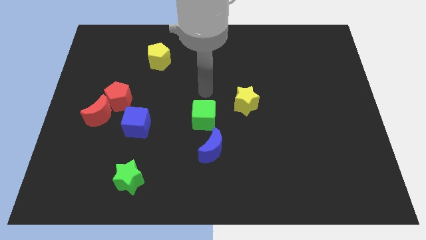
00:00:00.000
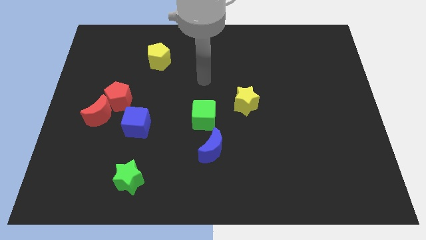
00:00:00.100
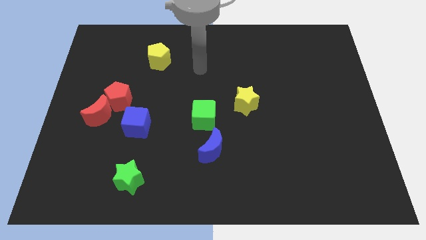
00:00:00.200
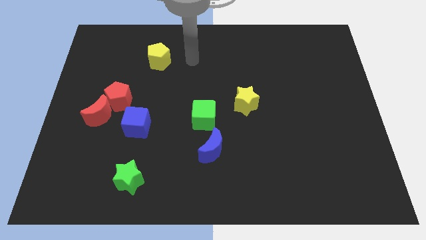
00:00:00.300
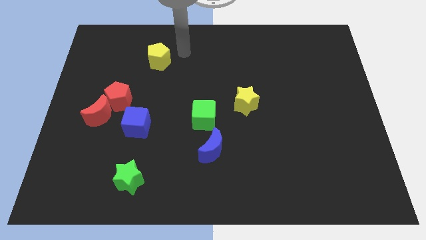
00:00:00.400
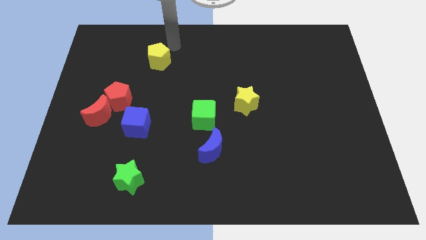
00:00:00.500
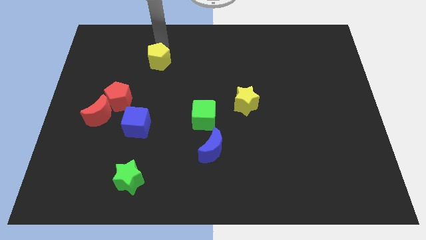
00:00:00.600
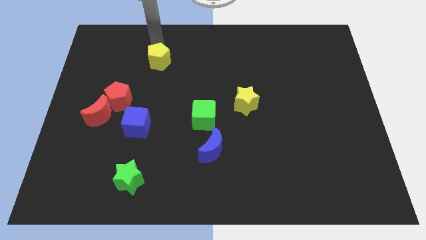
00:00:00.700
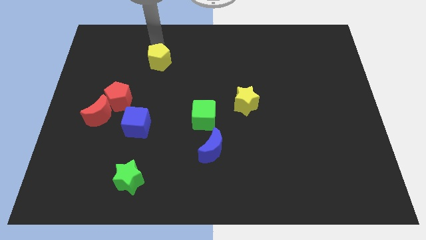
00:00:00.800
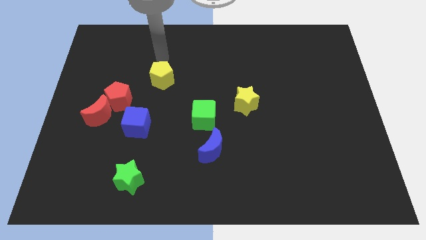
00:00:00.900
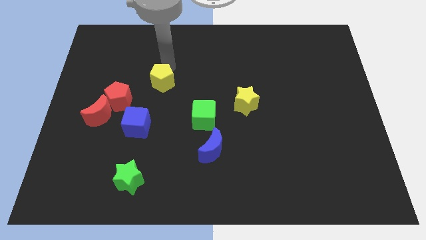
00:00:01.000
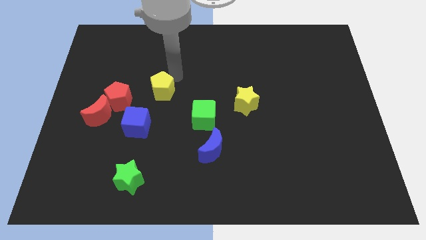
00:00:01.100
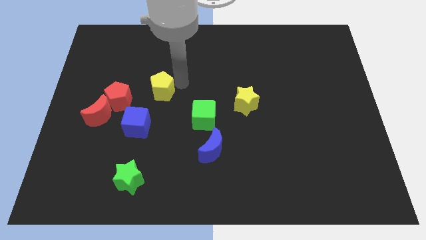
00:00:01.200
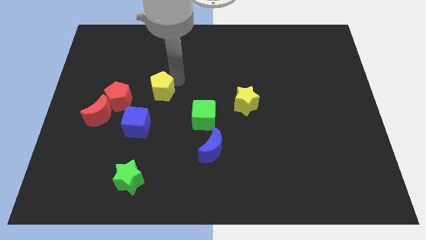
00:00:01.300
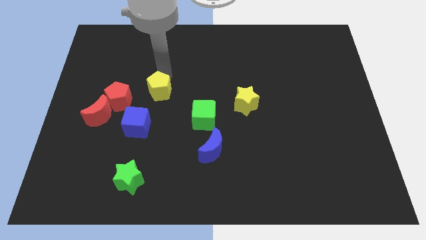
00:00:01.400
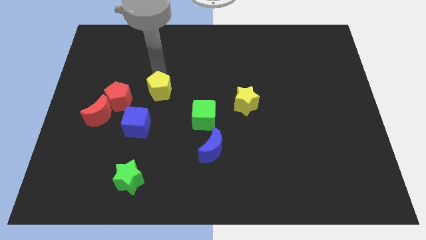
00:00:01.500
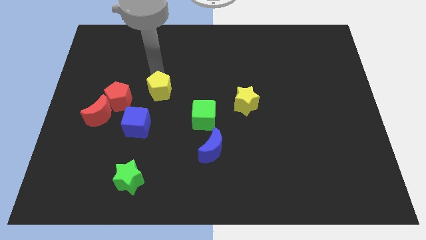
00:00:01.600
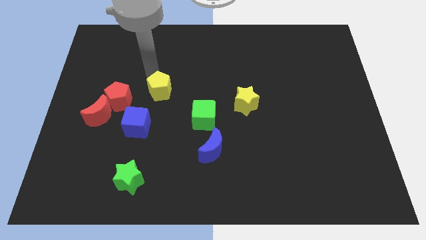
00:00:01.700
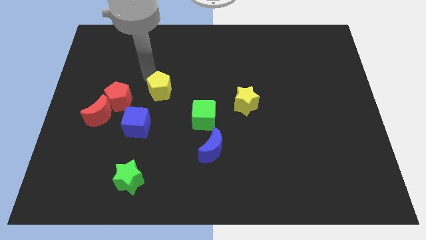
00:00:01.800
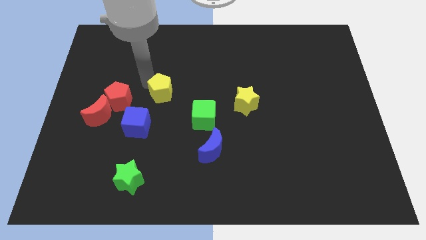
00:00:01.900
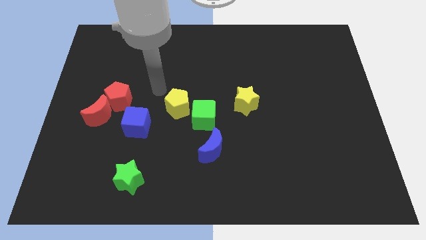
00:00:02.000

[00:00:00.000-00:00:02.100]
push the yellow pentagon close to the green cube

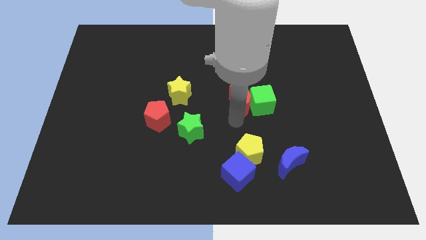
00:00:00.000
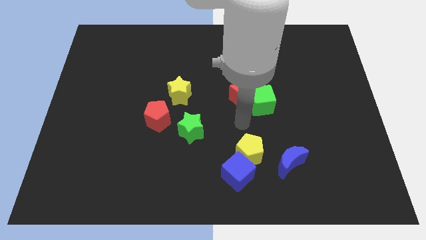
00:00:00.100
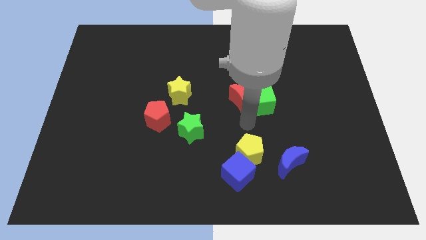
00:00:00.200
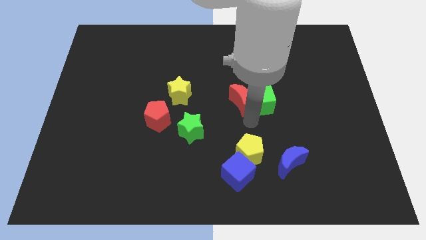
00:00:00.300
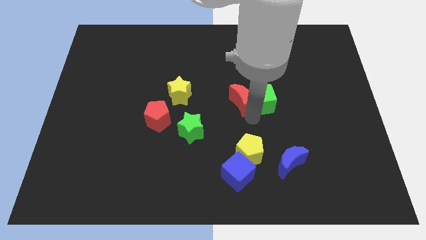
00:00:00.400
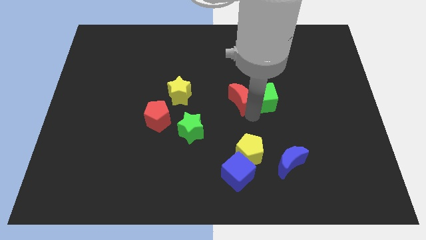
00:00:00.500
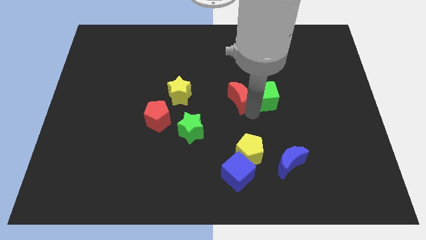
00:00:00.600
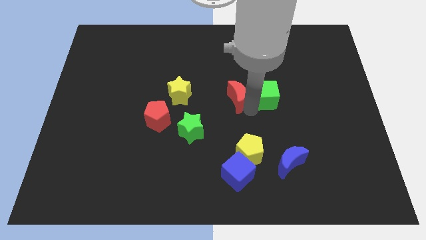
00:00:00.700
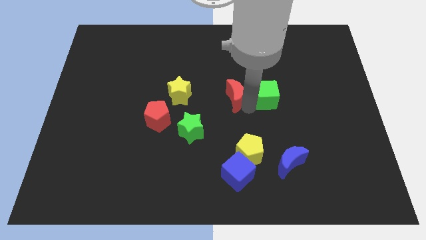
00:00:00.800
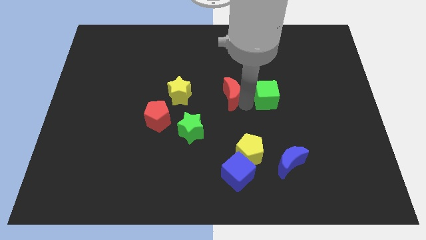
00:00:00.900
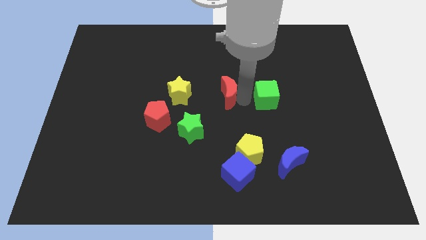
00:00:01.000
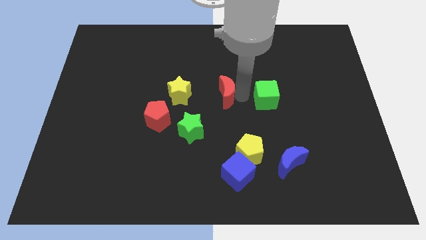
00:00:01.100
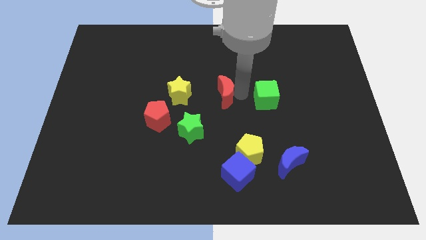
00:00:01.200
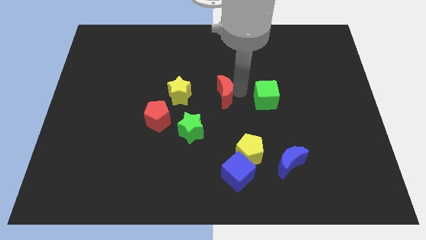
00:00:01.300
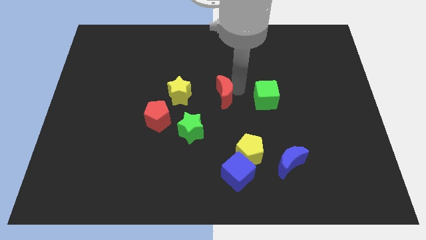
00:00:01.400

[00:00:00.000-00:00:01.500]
separate the red moon and the green cube

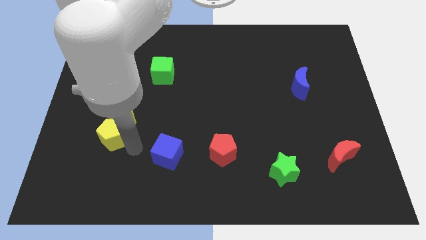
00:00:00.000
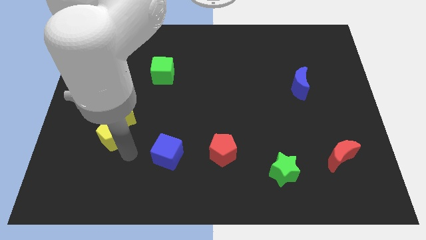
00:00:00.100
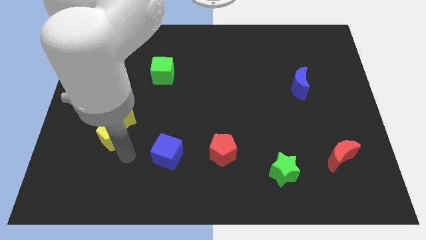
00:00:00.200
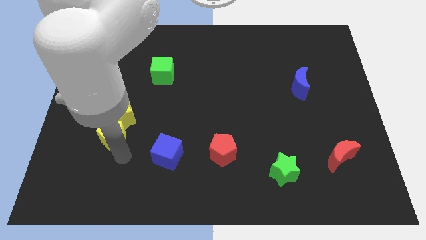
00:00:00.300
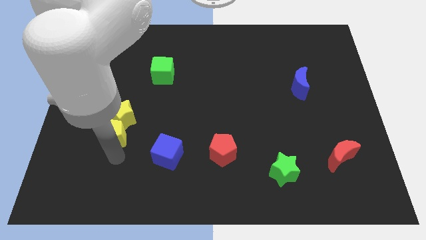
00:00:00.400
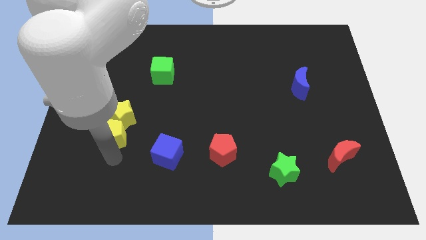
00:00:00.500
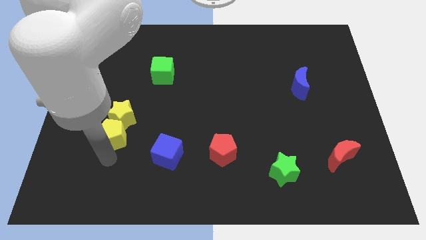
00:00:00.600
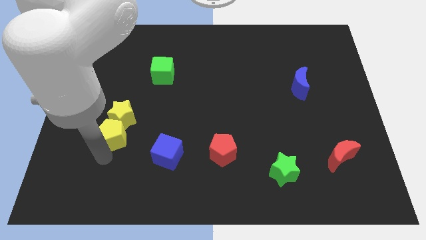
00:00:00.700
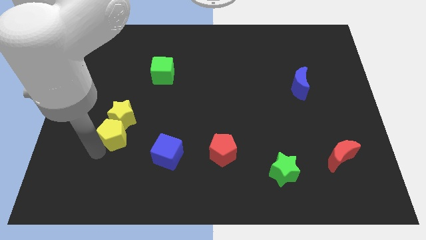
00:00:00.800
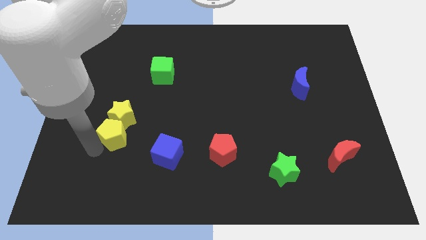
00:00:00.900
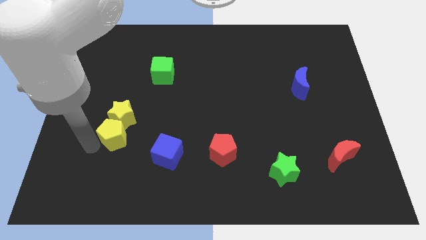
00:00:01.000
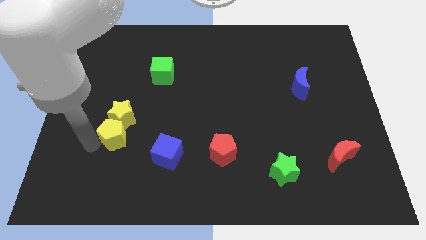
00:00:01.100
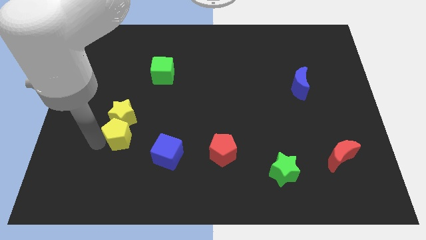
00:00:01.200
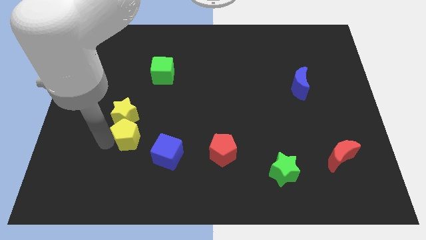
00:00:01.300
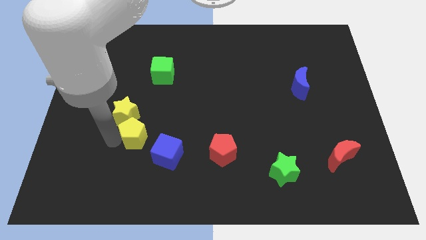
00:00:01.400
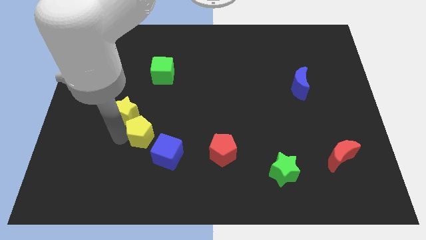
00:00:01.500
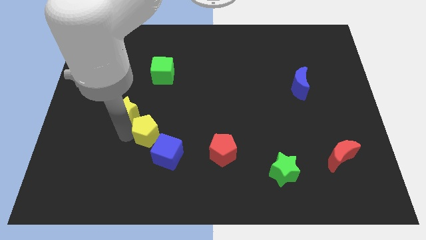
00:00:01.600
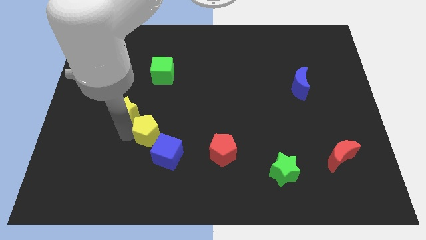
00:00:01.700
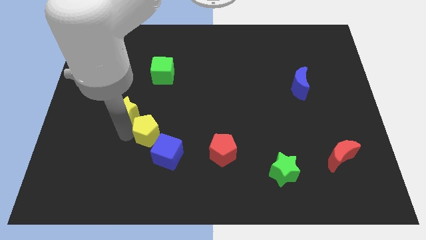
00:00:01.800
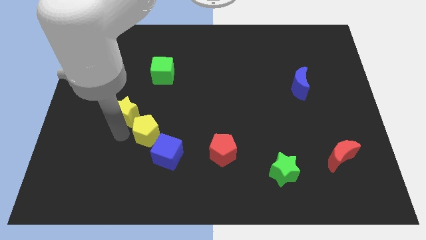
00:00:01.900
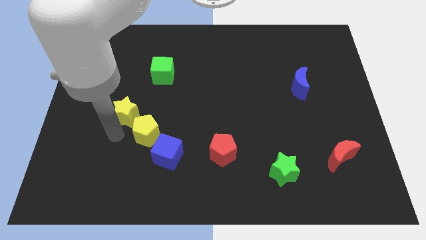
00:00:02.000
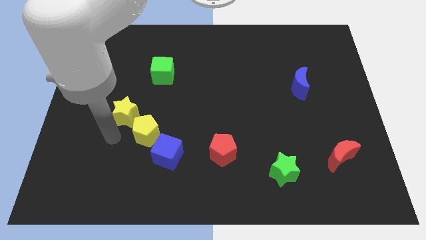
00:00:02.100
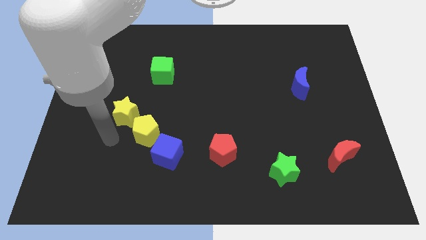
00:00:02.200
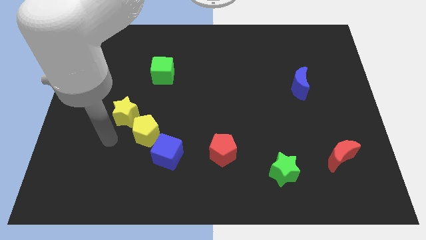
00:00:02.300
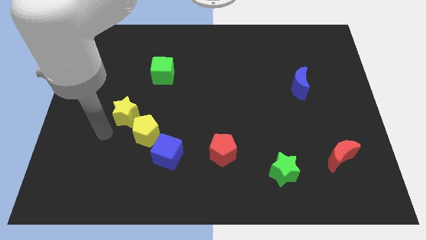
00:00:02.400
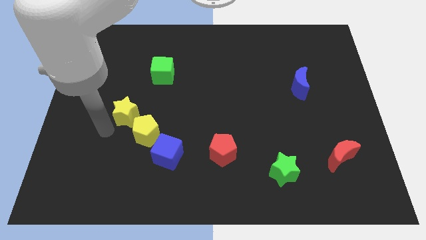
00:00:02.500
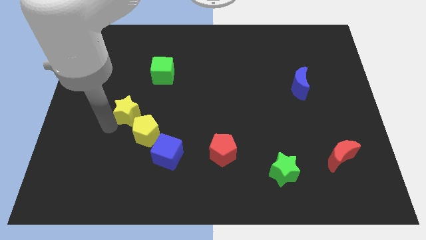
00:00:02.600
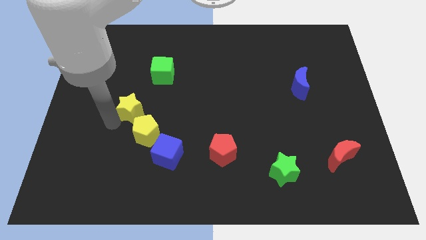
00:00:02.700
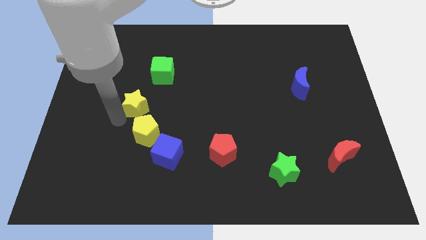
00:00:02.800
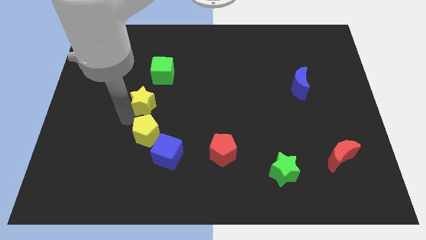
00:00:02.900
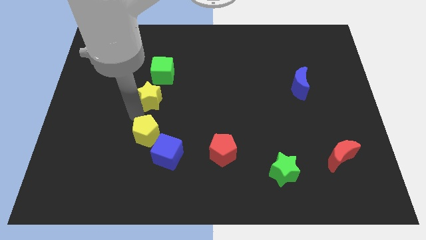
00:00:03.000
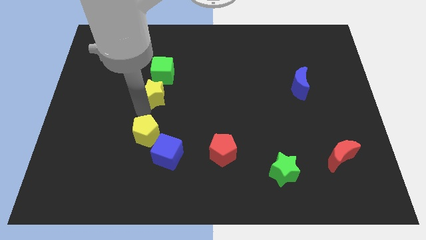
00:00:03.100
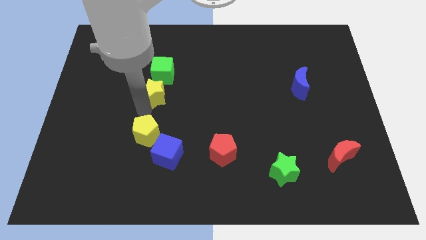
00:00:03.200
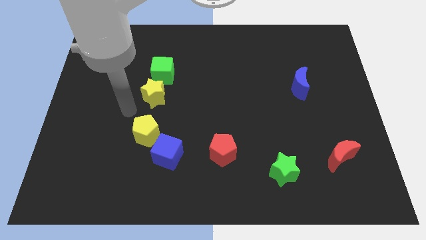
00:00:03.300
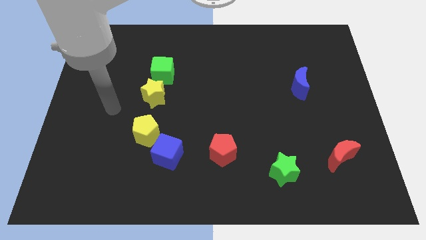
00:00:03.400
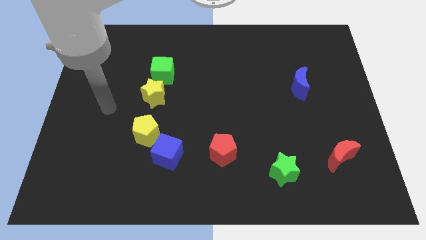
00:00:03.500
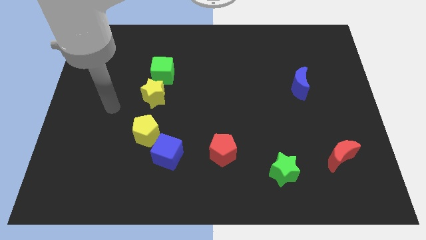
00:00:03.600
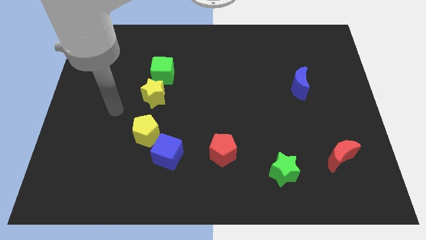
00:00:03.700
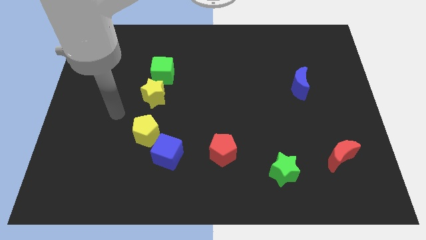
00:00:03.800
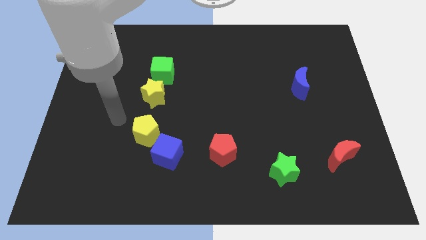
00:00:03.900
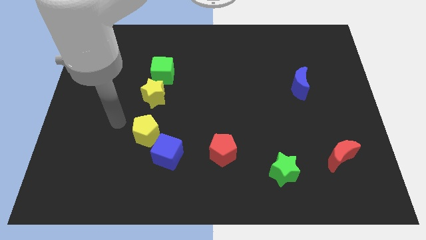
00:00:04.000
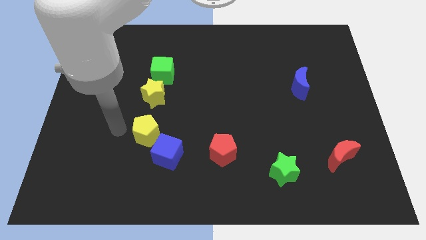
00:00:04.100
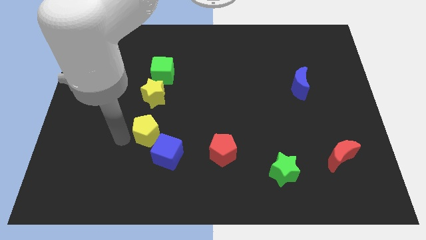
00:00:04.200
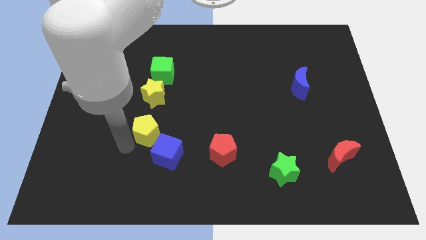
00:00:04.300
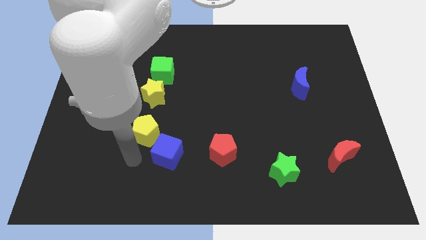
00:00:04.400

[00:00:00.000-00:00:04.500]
move the yellow pentagon and yellow star together towards the center of the board

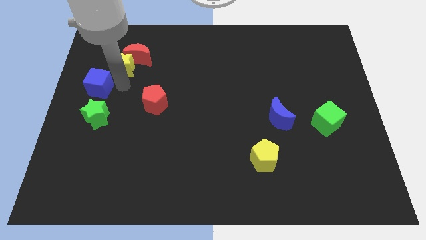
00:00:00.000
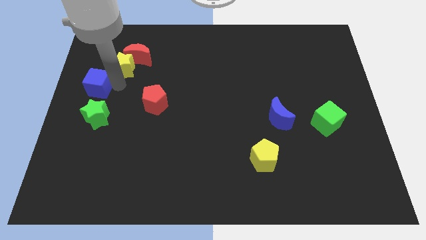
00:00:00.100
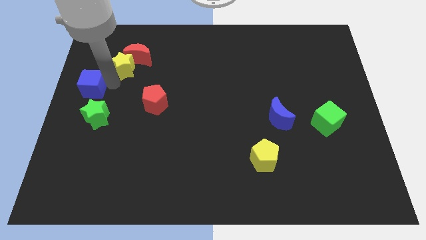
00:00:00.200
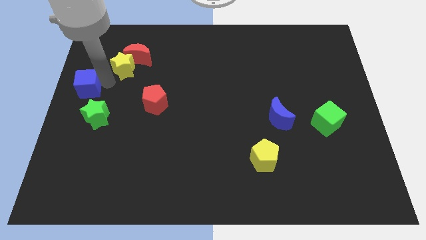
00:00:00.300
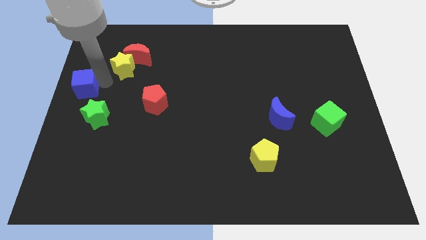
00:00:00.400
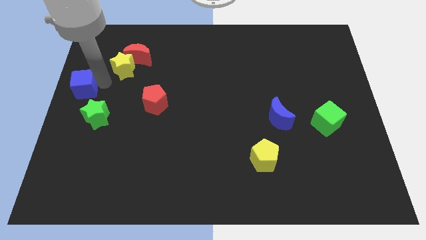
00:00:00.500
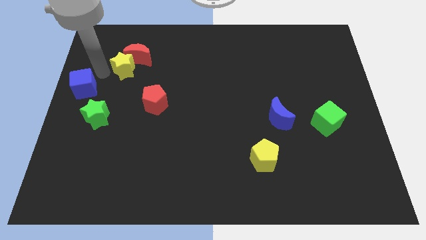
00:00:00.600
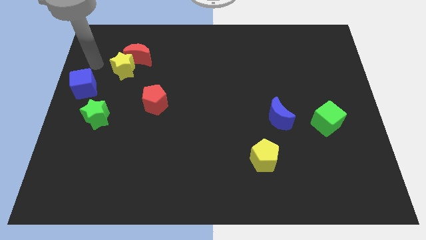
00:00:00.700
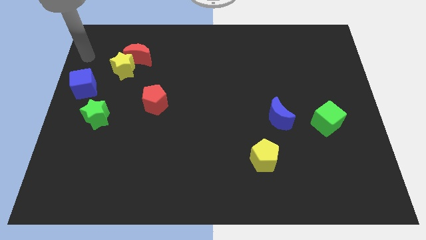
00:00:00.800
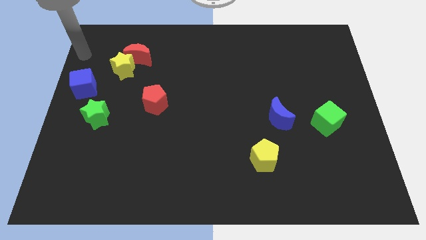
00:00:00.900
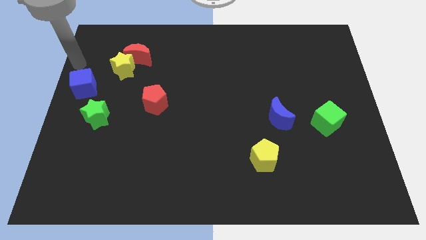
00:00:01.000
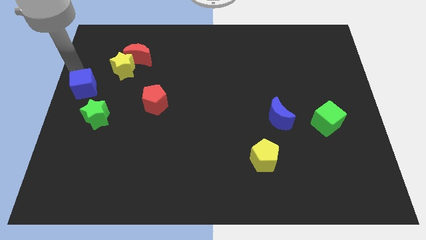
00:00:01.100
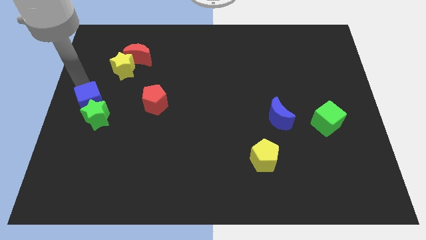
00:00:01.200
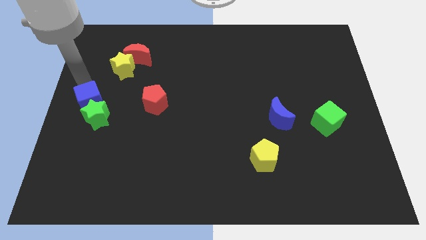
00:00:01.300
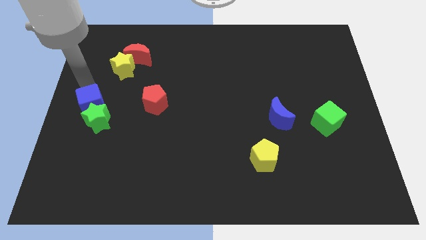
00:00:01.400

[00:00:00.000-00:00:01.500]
move the blue cube into the green star
